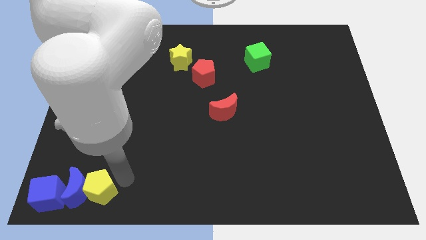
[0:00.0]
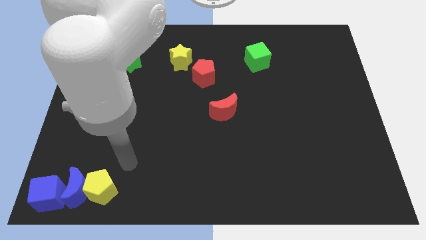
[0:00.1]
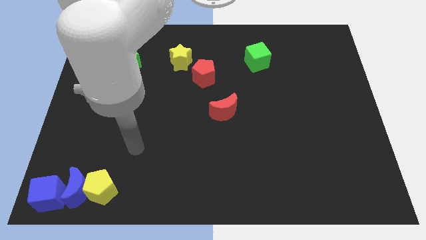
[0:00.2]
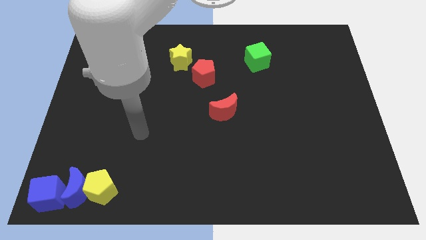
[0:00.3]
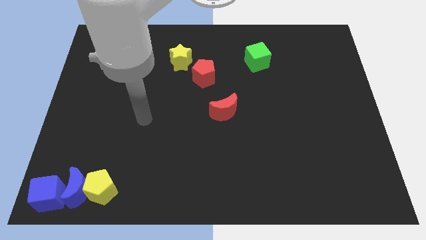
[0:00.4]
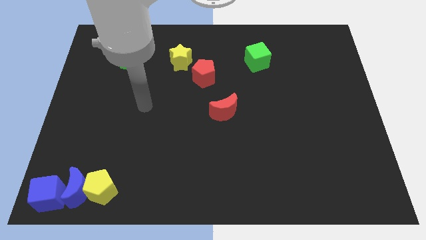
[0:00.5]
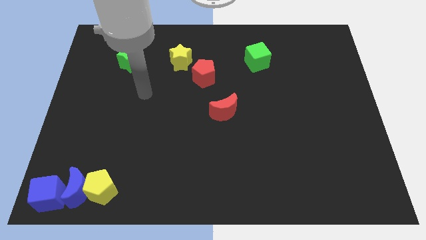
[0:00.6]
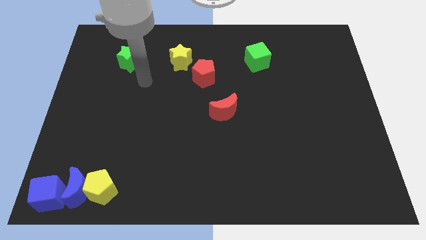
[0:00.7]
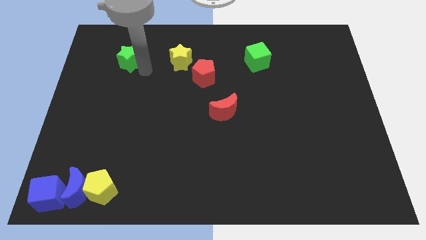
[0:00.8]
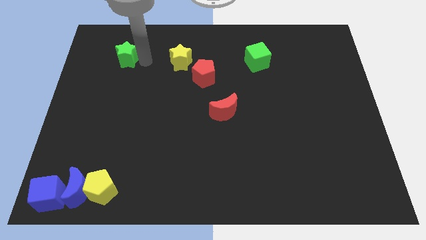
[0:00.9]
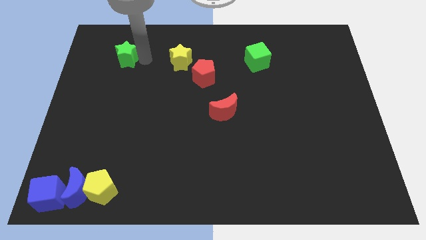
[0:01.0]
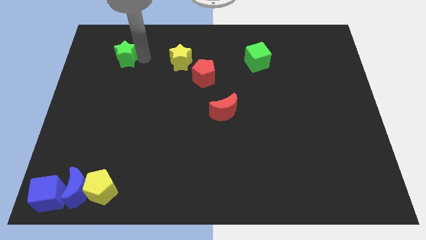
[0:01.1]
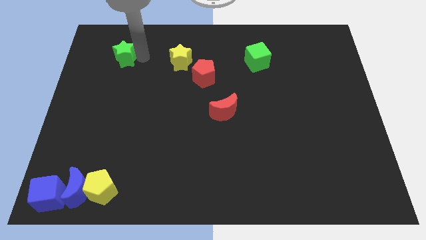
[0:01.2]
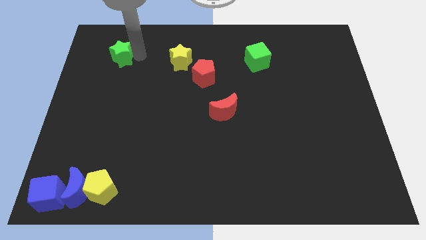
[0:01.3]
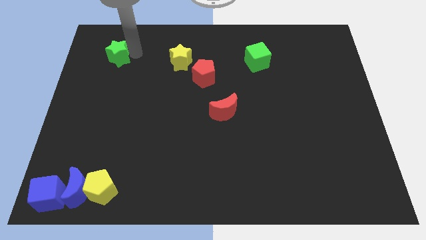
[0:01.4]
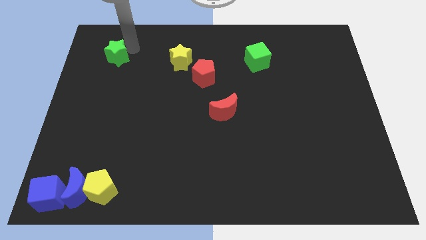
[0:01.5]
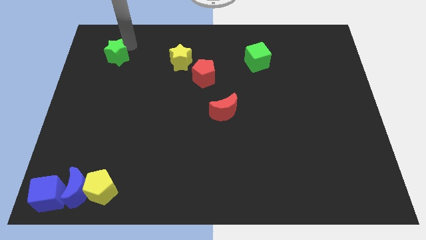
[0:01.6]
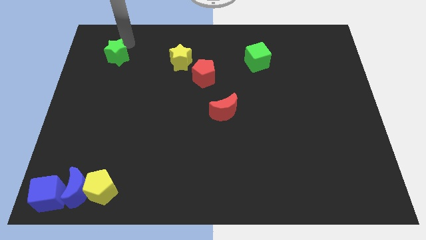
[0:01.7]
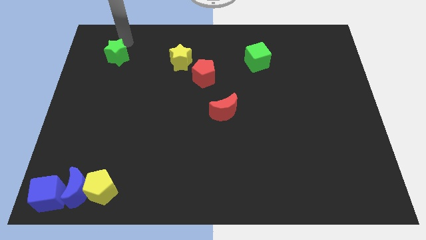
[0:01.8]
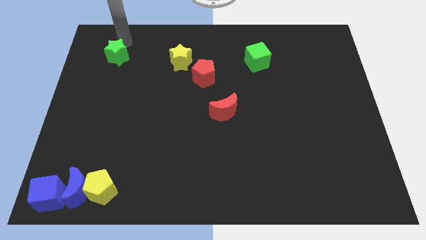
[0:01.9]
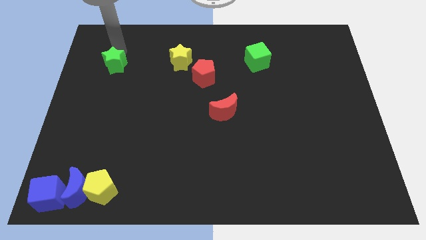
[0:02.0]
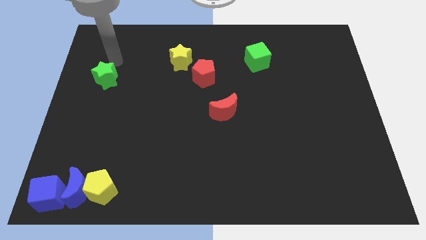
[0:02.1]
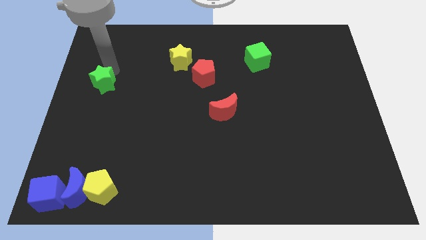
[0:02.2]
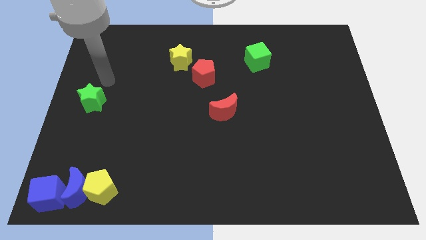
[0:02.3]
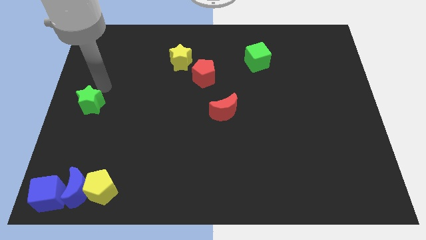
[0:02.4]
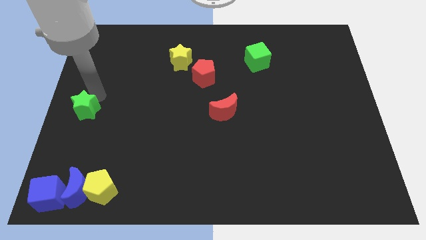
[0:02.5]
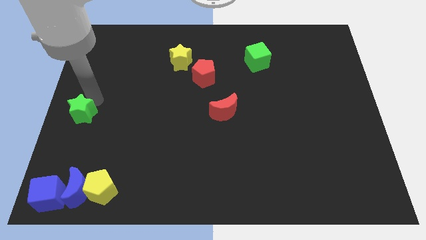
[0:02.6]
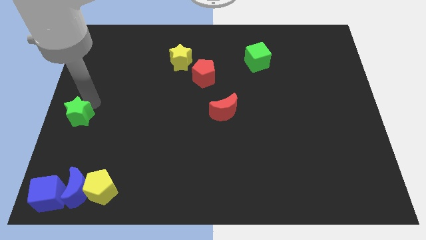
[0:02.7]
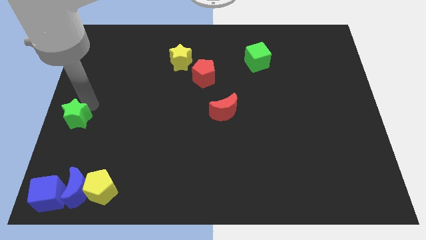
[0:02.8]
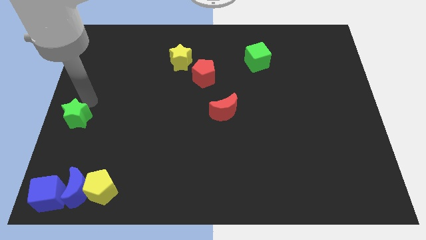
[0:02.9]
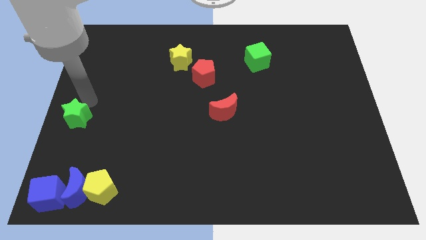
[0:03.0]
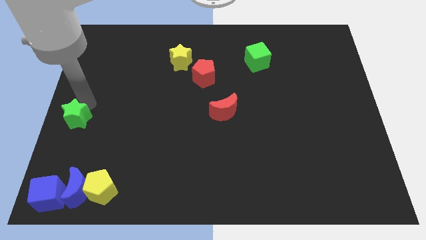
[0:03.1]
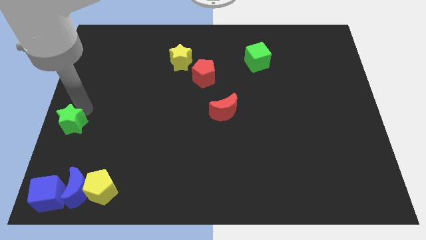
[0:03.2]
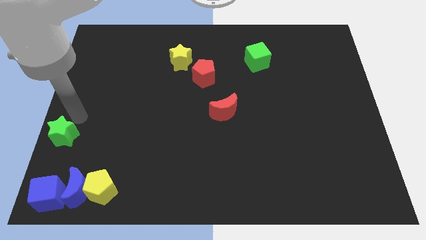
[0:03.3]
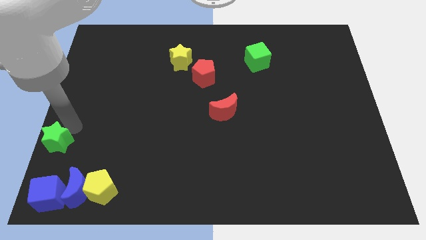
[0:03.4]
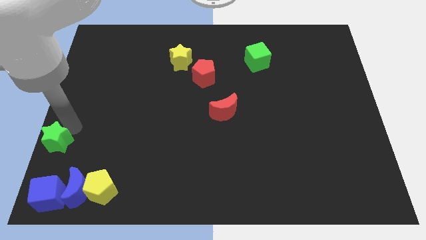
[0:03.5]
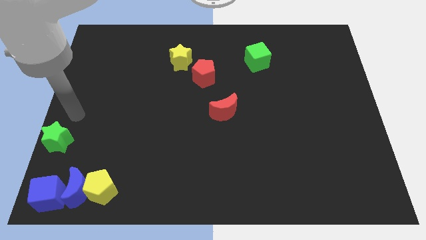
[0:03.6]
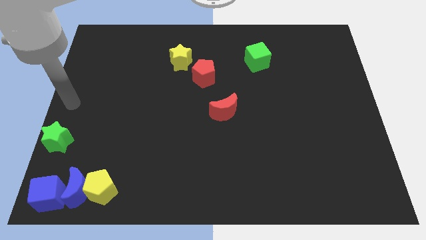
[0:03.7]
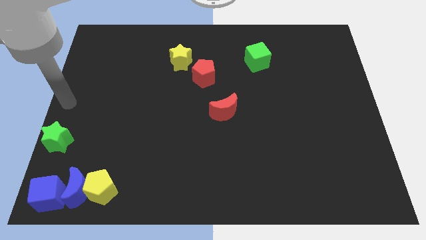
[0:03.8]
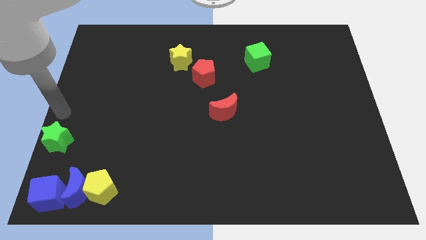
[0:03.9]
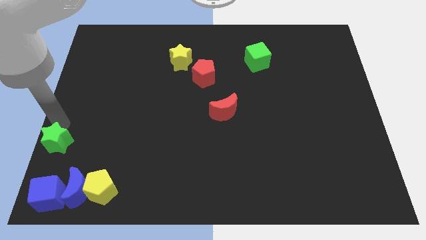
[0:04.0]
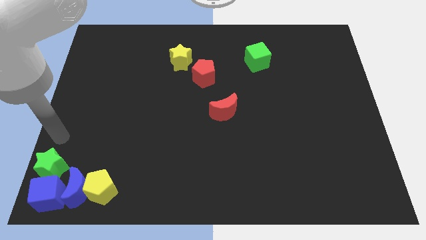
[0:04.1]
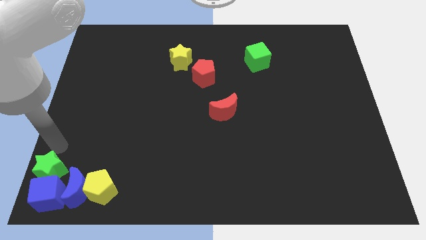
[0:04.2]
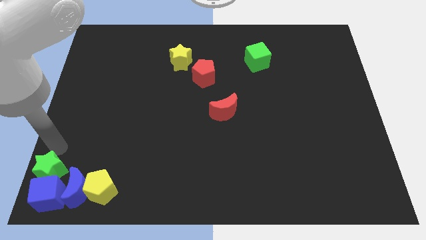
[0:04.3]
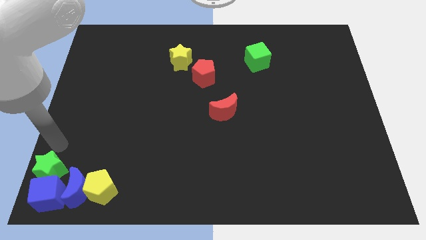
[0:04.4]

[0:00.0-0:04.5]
move the green star into the top side of the blue cube

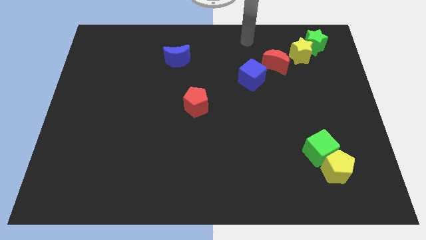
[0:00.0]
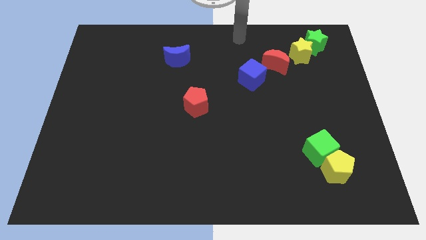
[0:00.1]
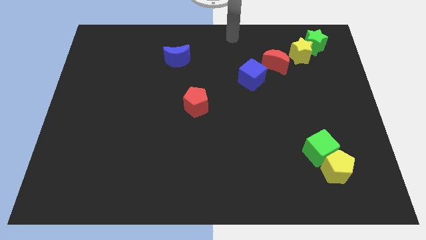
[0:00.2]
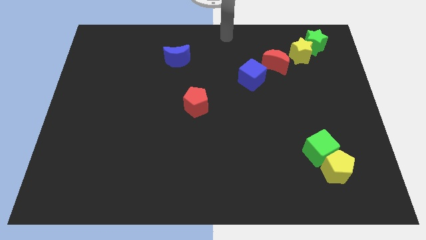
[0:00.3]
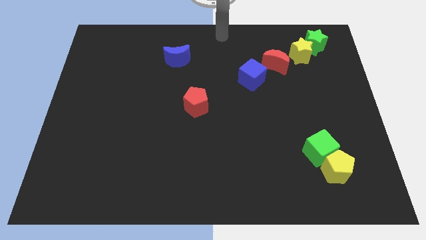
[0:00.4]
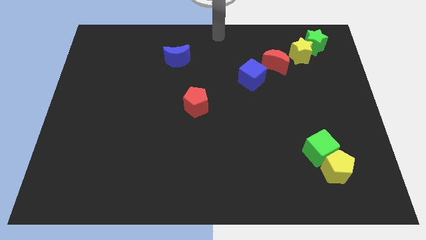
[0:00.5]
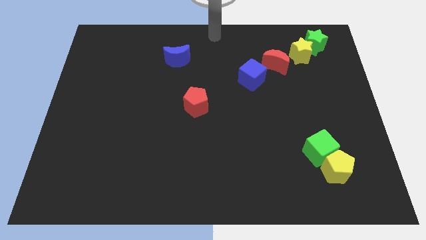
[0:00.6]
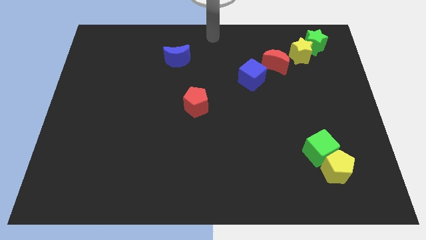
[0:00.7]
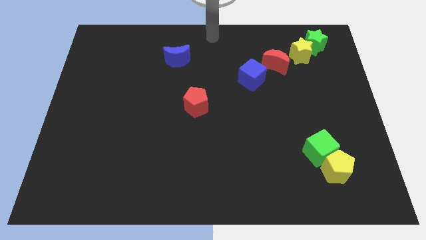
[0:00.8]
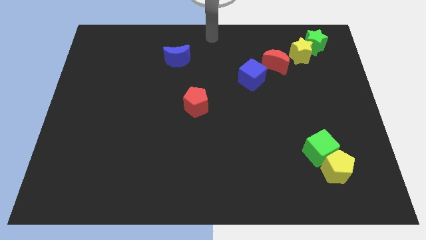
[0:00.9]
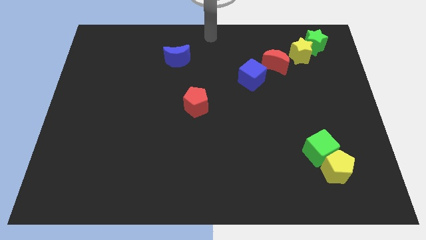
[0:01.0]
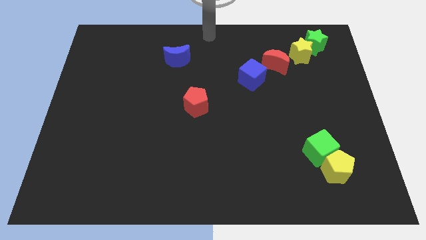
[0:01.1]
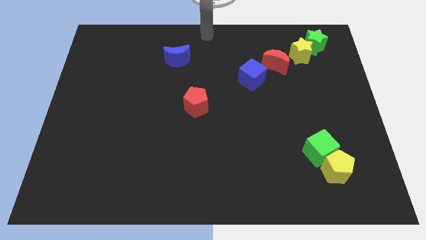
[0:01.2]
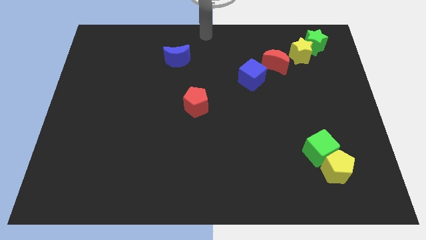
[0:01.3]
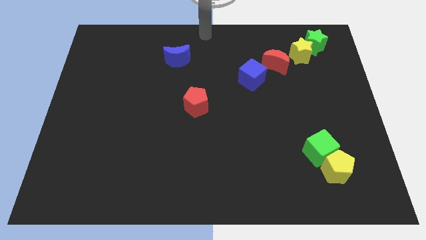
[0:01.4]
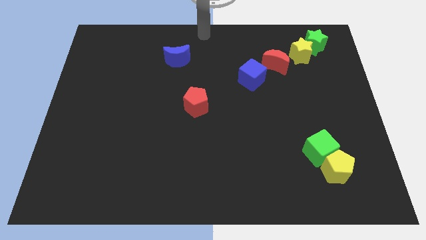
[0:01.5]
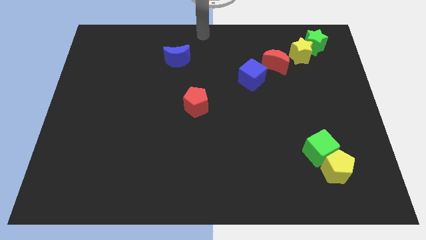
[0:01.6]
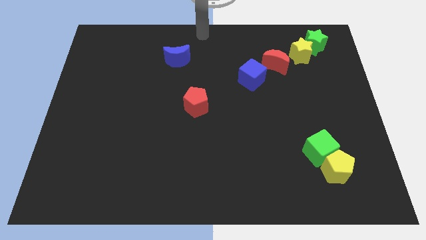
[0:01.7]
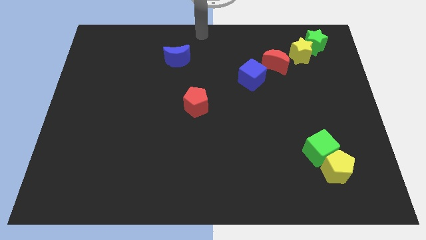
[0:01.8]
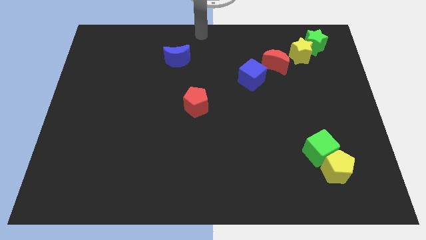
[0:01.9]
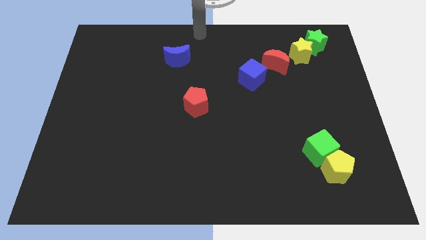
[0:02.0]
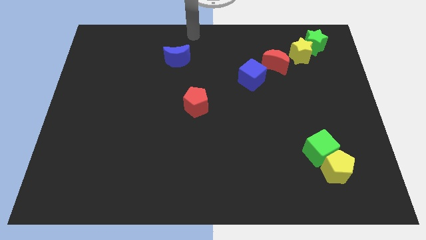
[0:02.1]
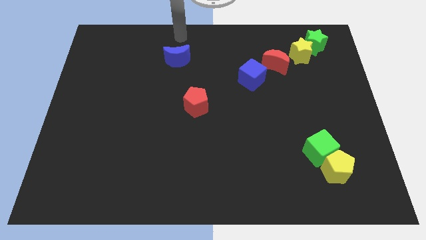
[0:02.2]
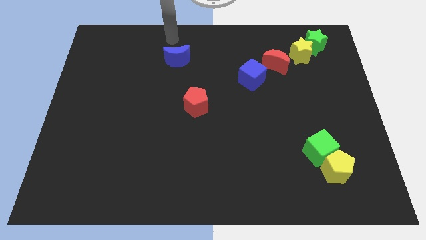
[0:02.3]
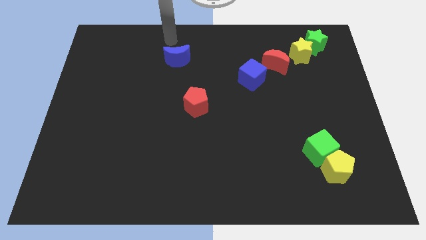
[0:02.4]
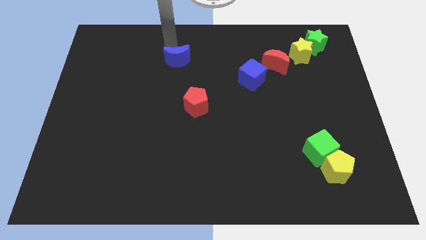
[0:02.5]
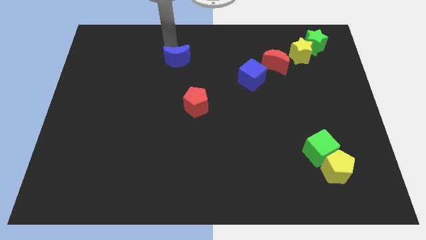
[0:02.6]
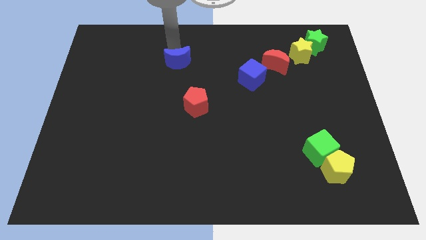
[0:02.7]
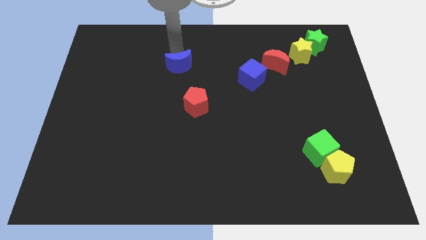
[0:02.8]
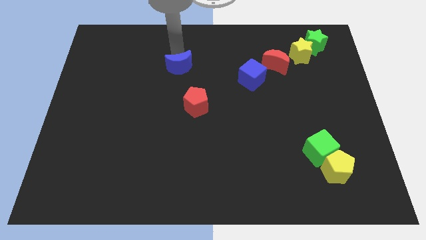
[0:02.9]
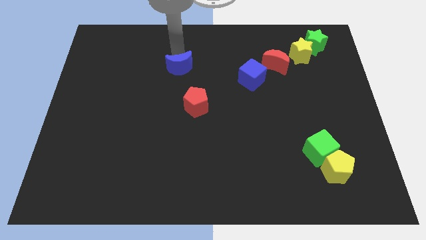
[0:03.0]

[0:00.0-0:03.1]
push blue moon parallel to red moon

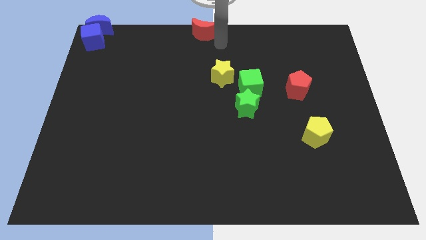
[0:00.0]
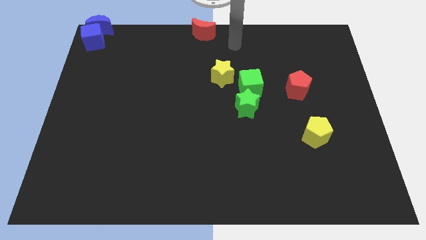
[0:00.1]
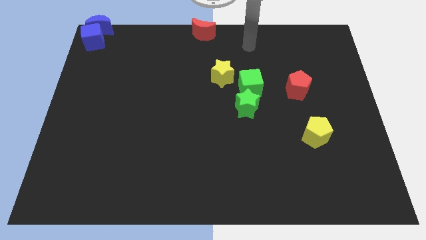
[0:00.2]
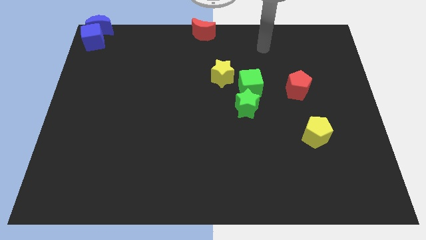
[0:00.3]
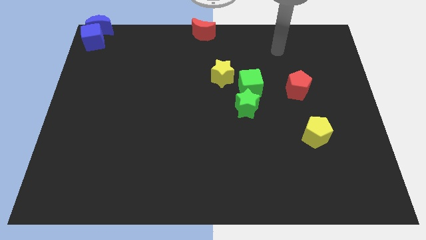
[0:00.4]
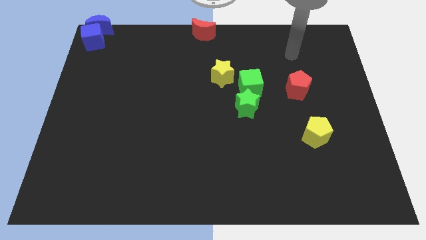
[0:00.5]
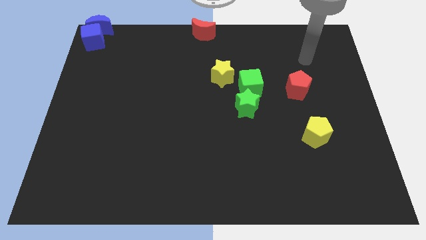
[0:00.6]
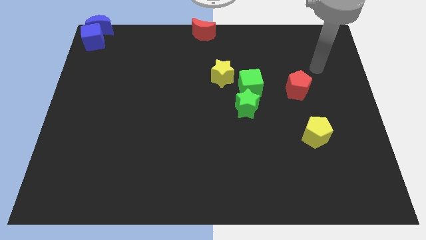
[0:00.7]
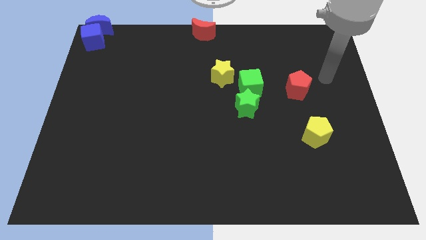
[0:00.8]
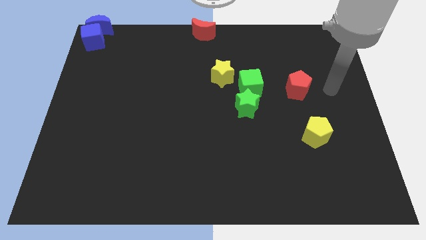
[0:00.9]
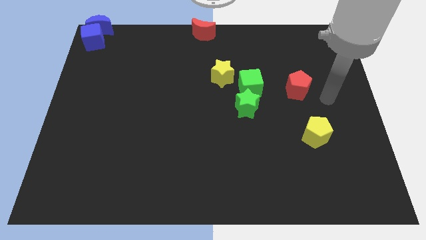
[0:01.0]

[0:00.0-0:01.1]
point your arm at the right of the red pentagon

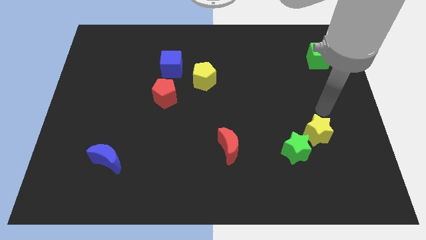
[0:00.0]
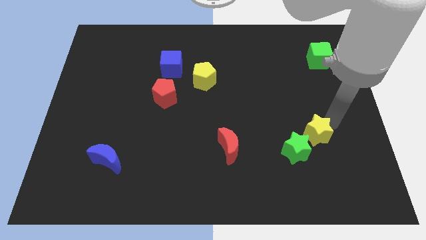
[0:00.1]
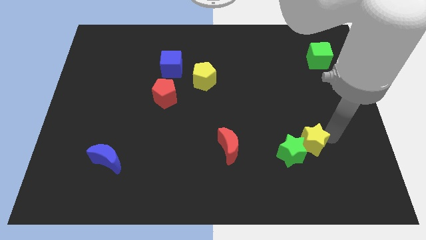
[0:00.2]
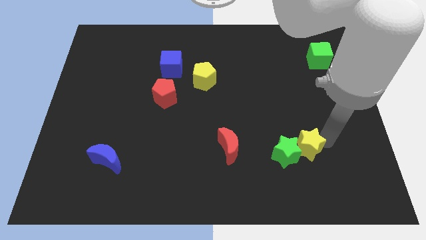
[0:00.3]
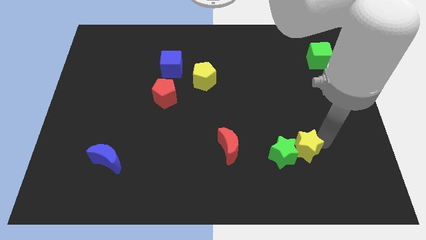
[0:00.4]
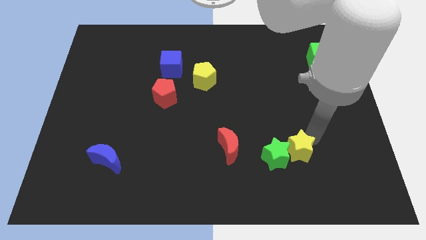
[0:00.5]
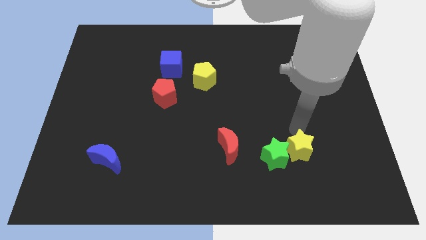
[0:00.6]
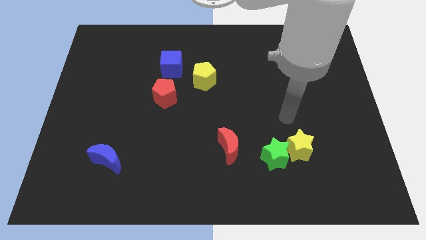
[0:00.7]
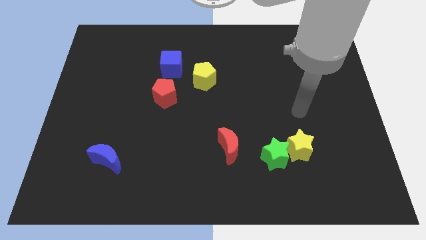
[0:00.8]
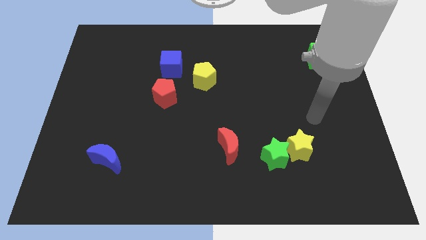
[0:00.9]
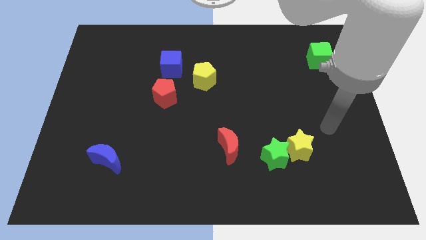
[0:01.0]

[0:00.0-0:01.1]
push yellow star and green star towards bottom of the table
